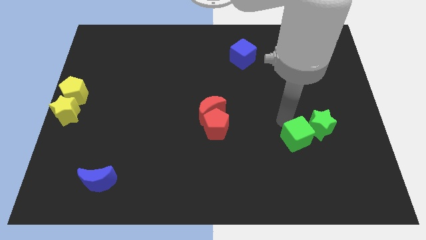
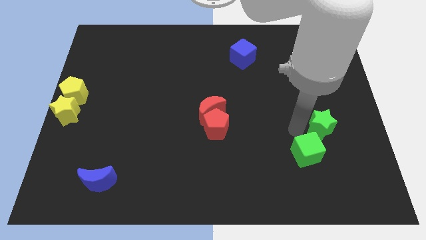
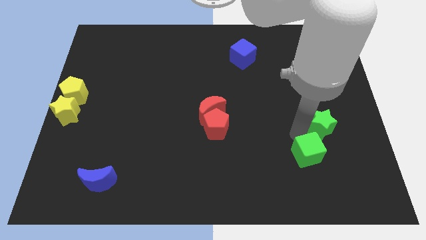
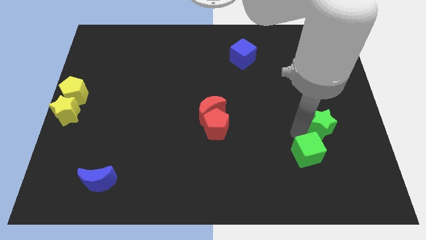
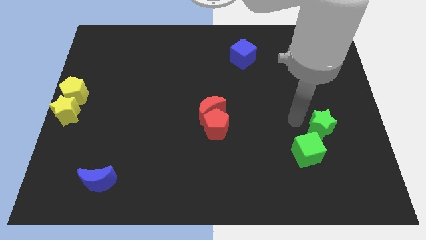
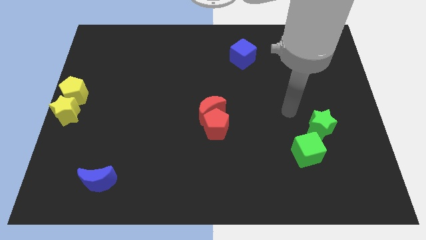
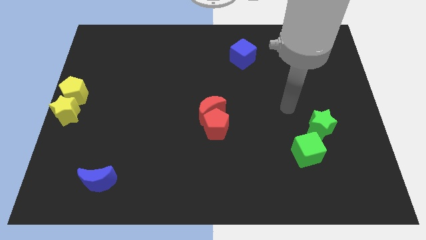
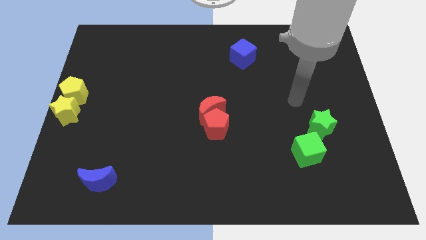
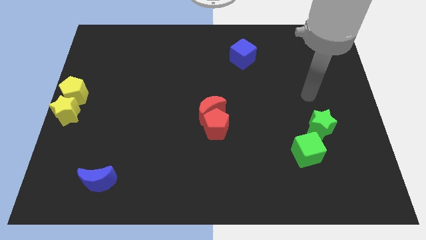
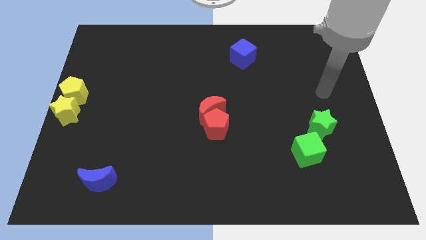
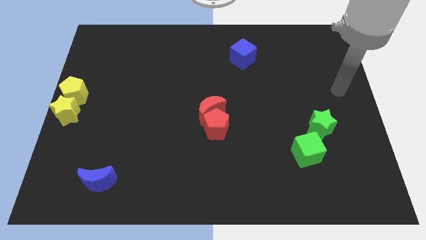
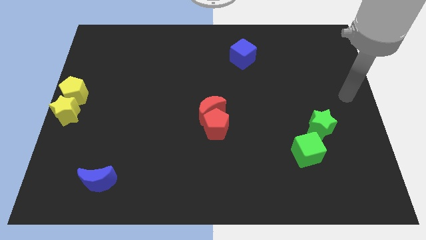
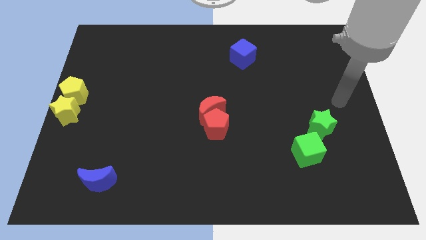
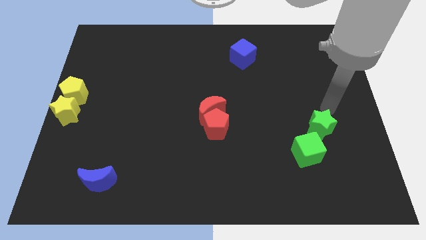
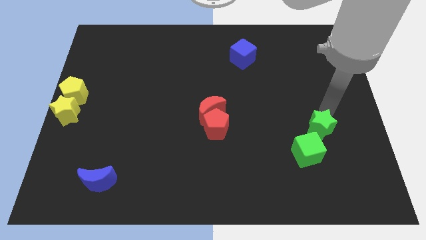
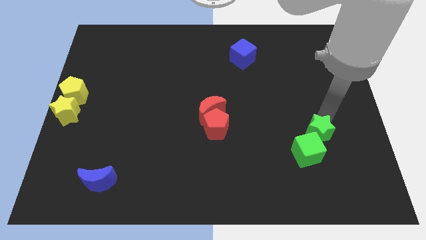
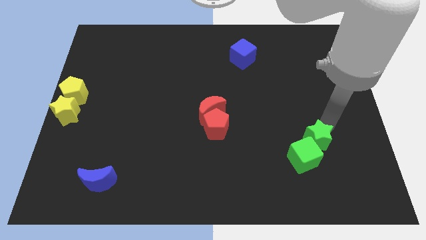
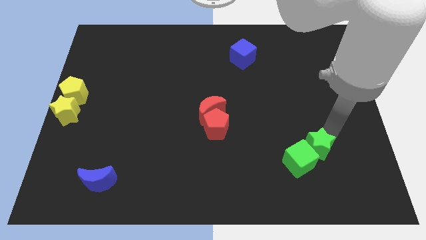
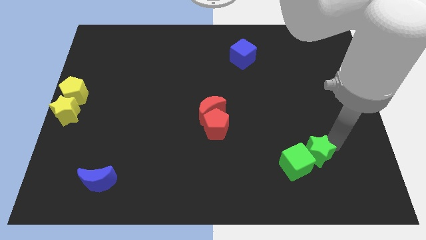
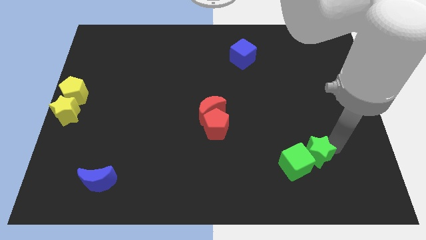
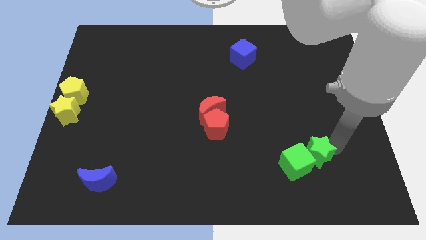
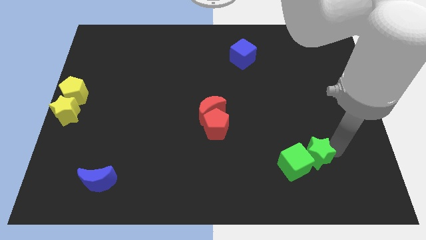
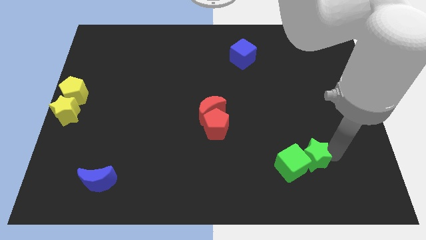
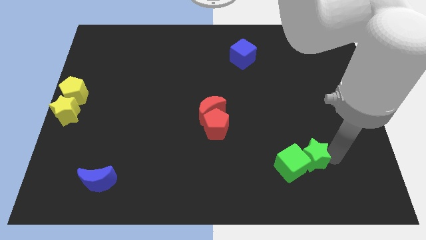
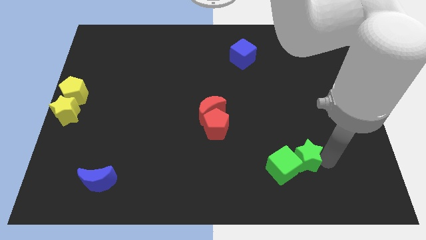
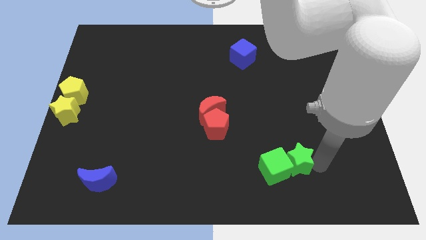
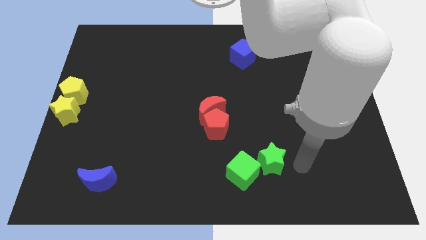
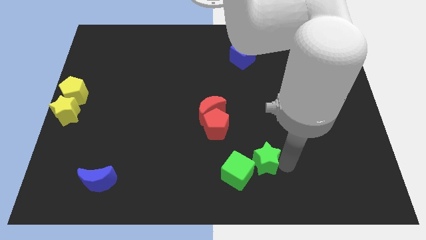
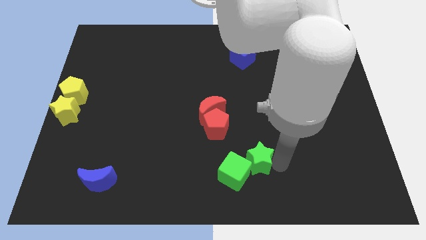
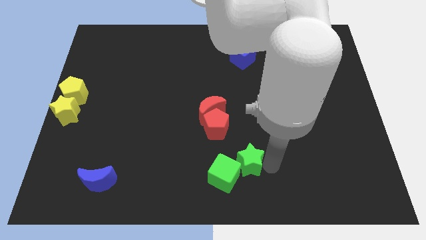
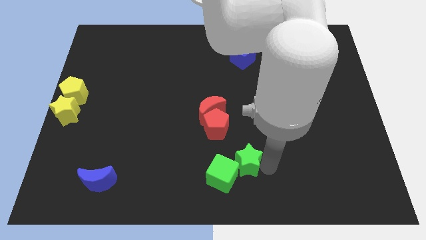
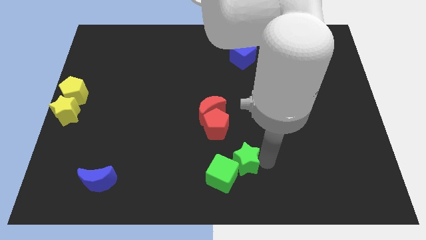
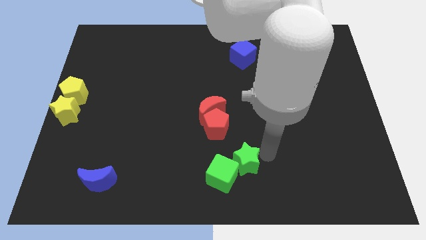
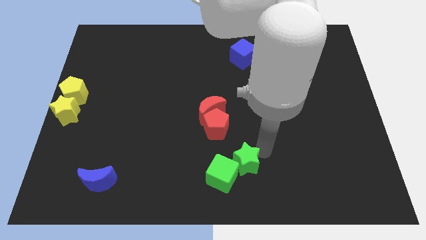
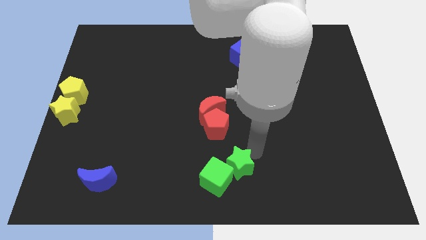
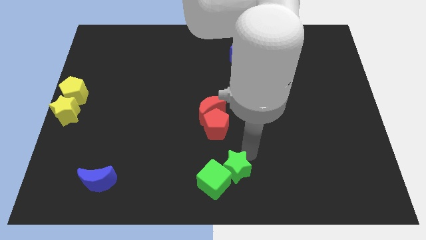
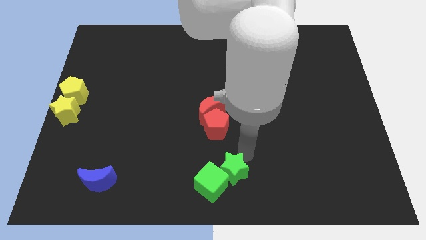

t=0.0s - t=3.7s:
move the green cube and green star to the bottom center

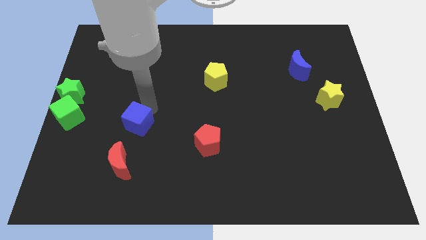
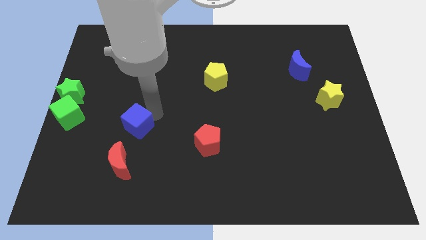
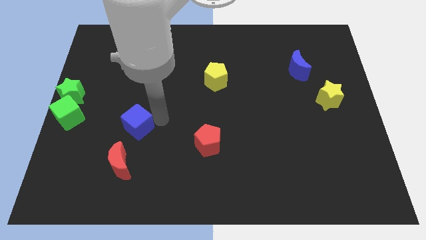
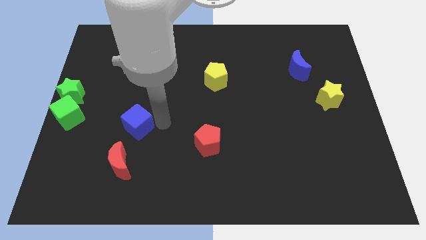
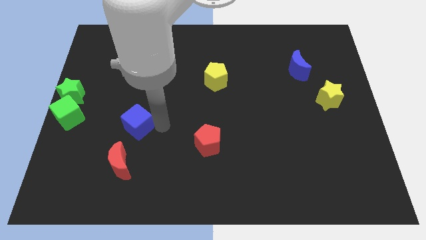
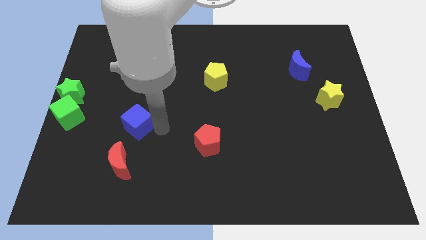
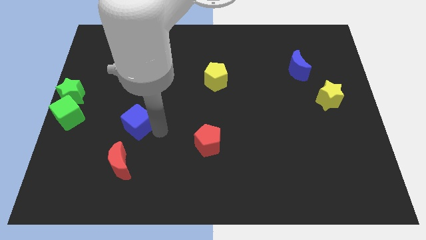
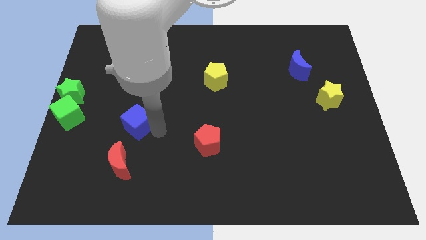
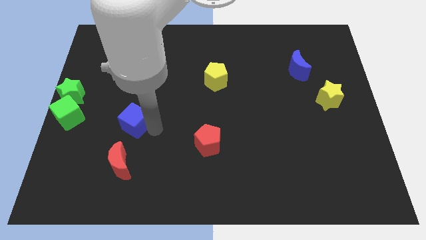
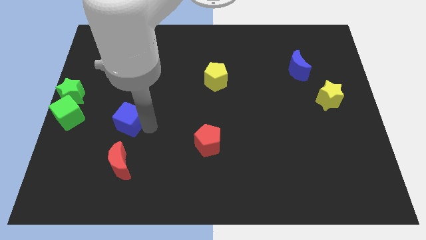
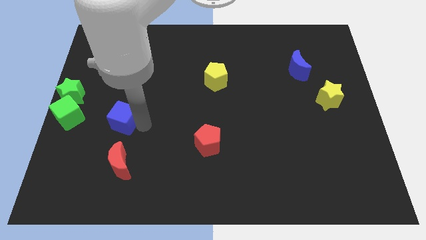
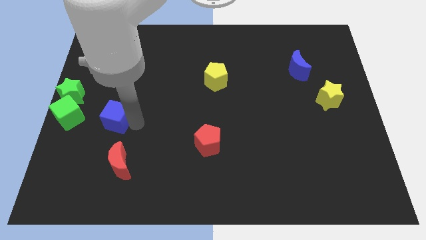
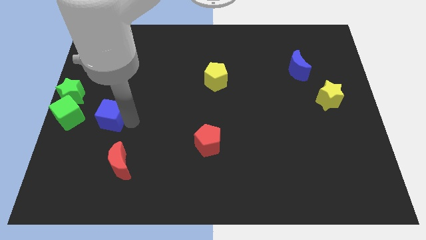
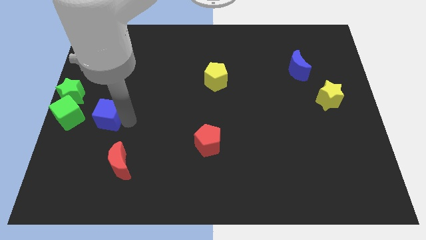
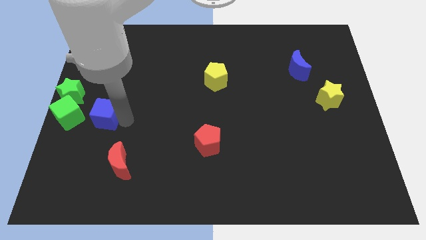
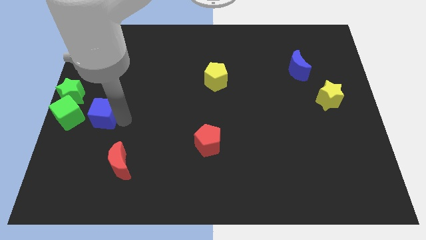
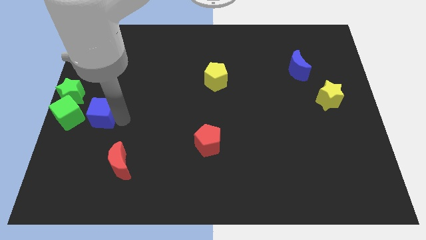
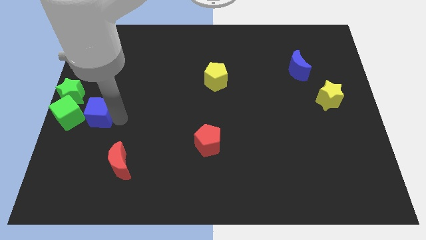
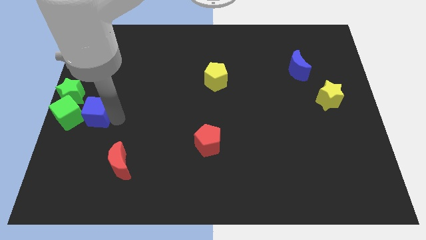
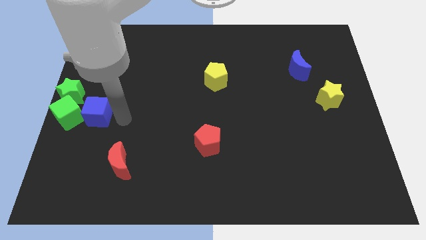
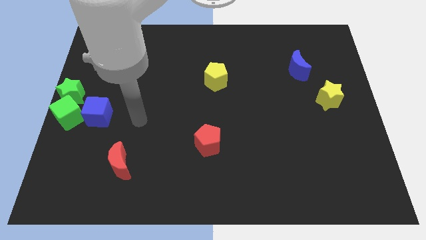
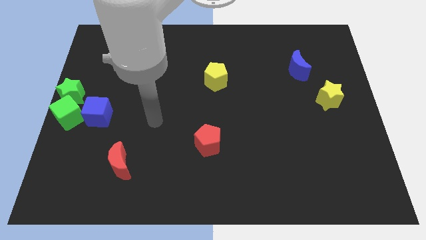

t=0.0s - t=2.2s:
move blue cube towards the green cube

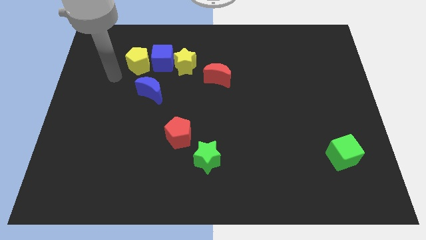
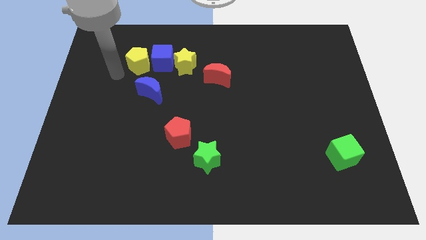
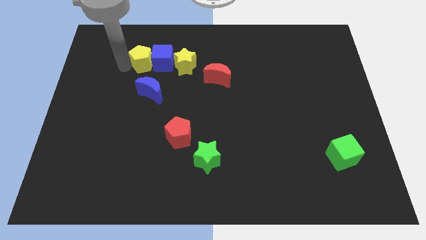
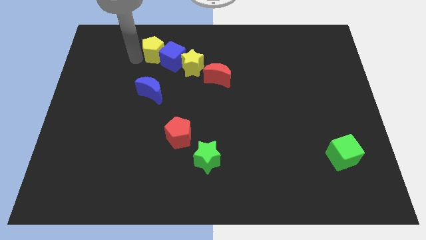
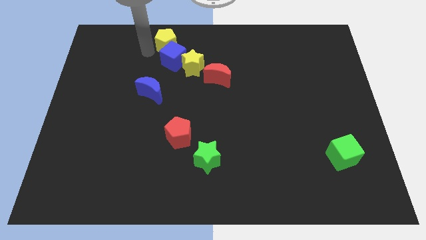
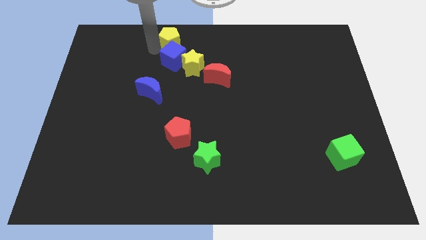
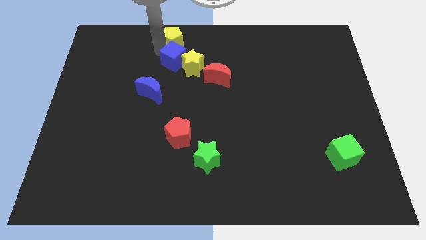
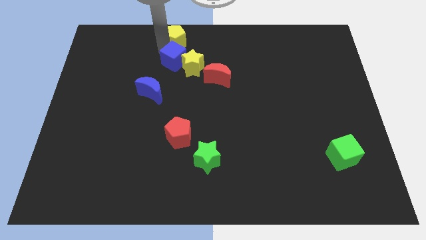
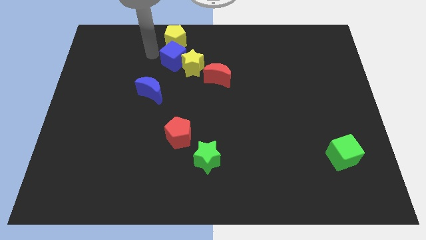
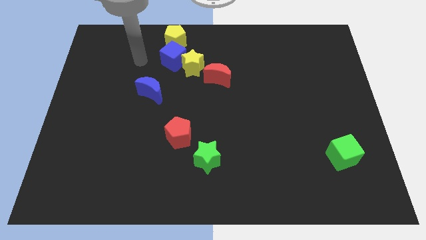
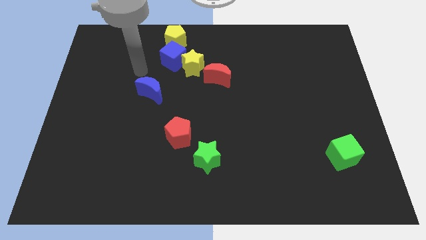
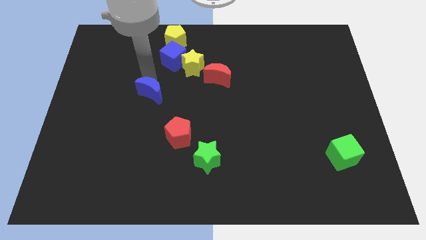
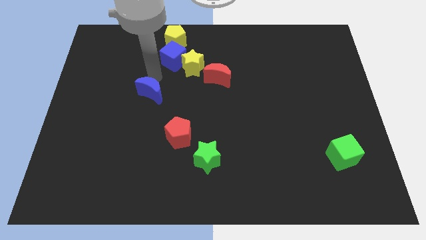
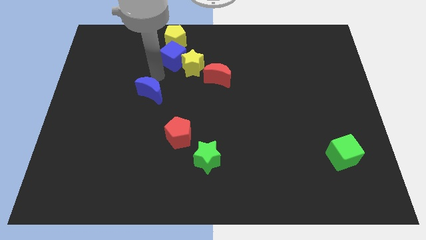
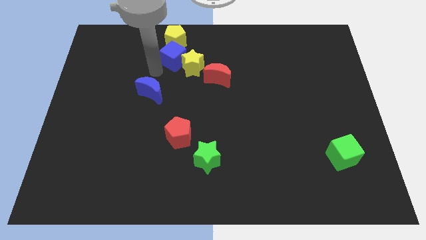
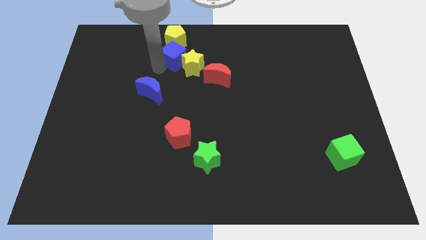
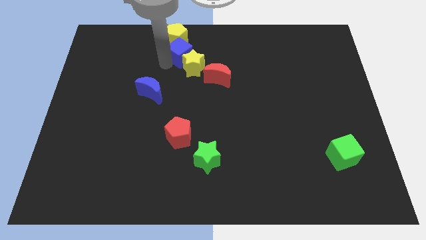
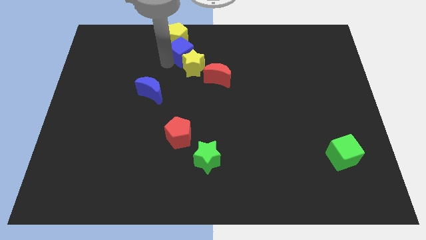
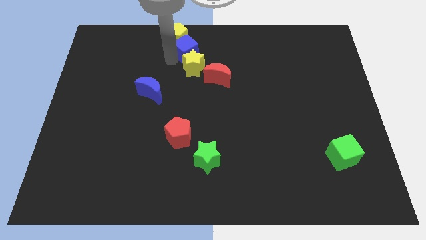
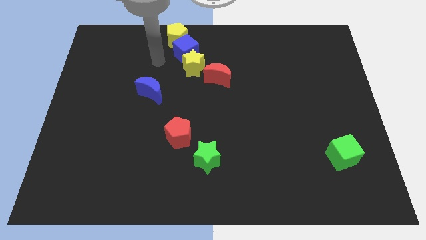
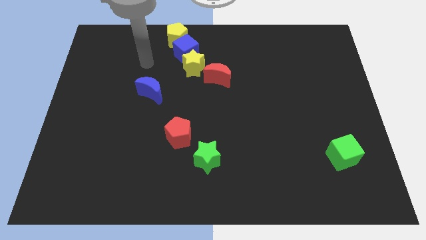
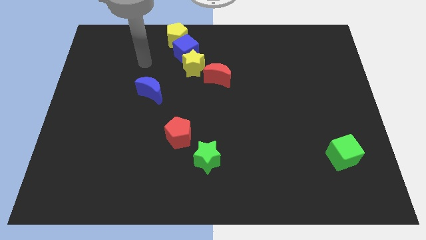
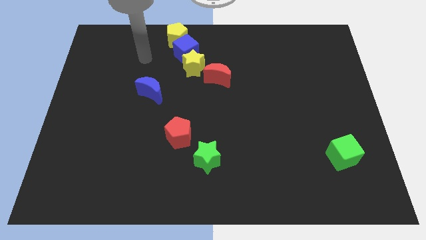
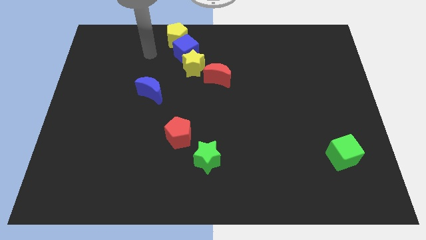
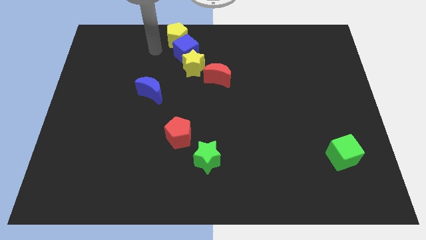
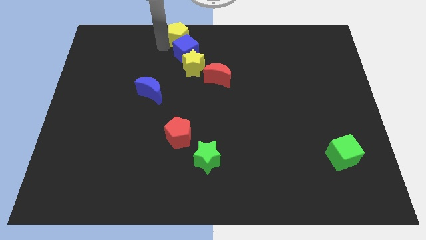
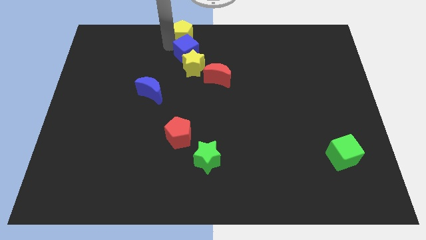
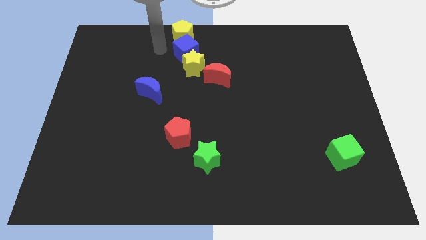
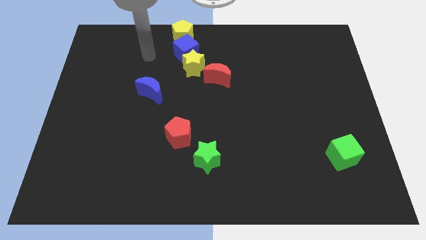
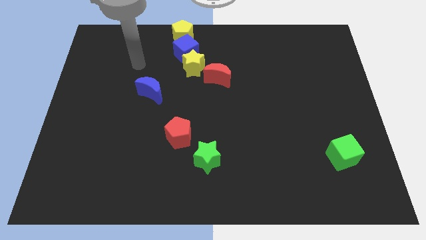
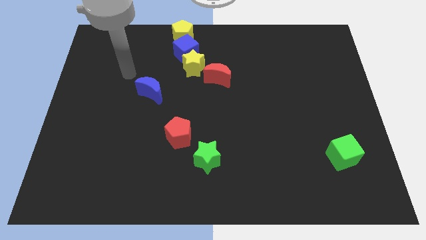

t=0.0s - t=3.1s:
move yellow pentagon and blue cube at center top

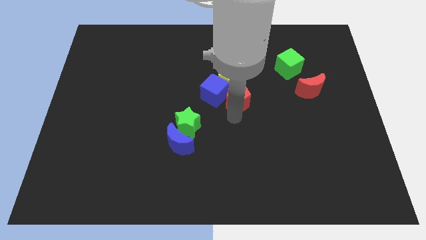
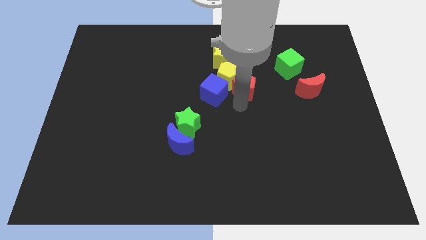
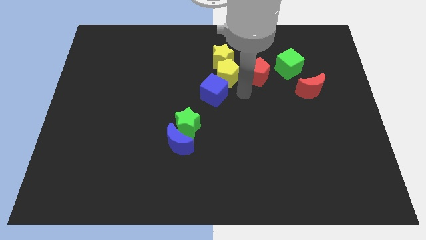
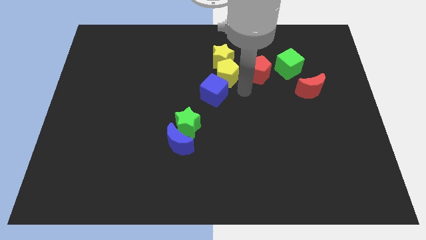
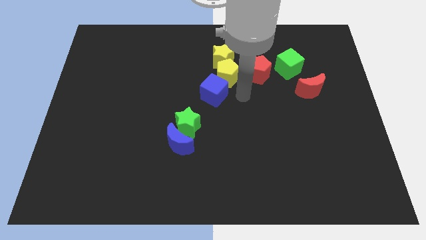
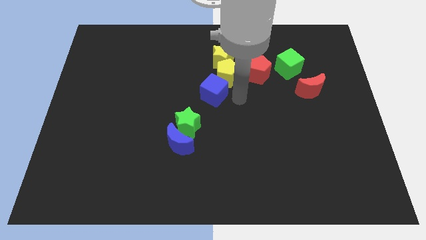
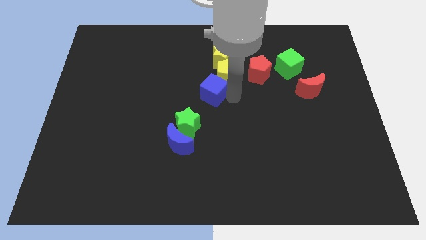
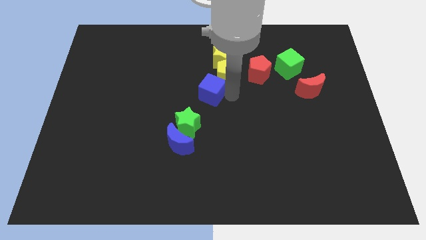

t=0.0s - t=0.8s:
move the red pentagon close to the green cube
